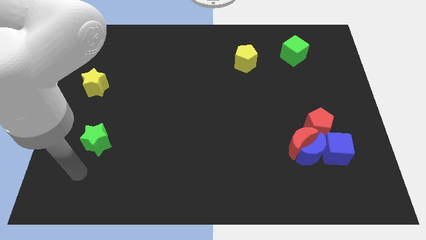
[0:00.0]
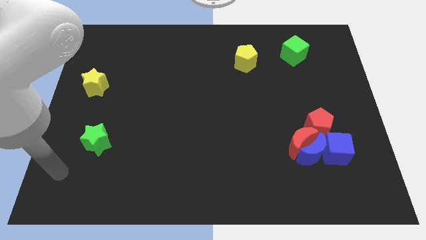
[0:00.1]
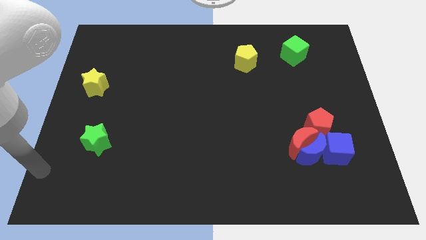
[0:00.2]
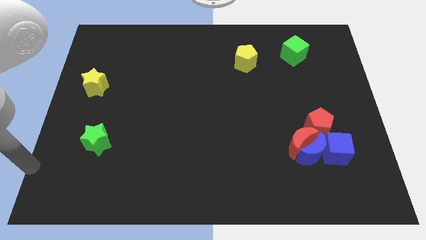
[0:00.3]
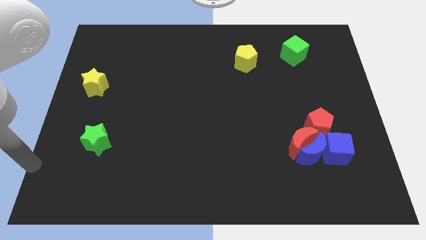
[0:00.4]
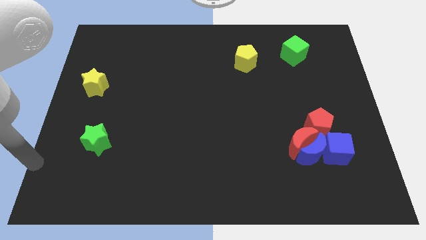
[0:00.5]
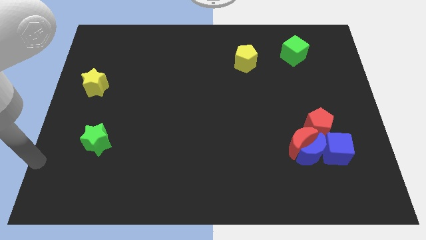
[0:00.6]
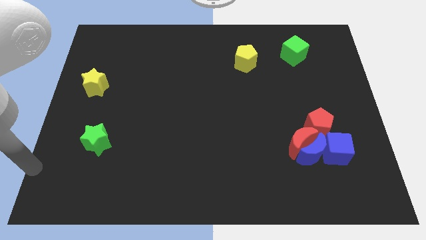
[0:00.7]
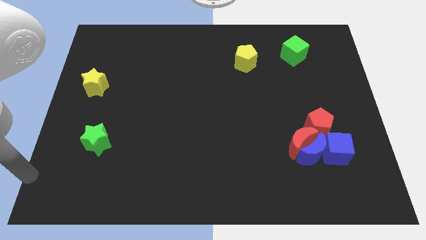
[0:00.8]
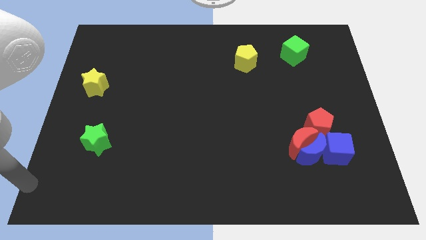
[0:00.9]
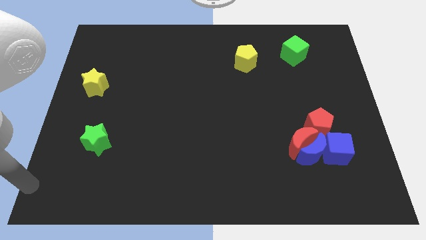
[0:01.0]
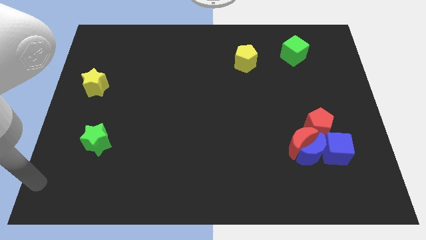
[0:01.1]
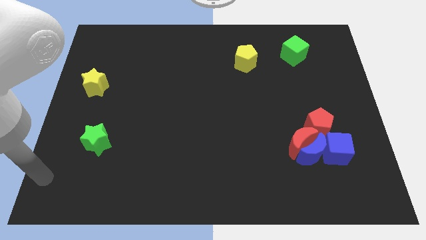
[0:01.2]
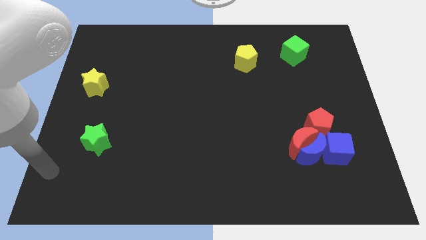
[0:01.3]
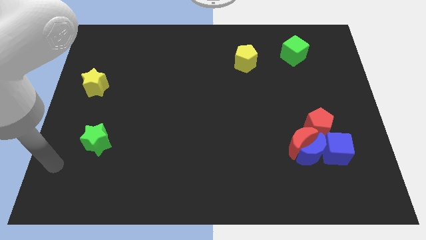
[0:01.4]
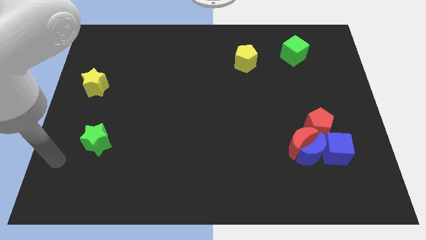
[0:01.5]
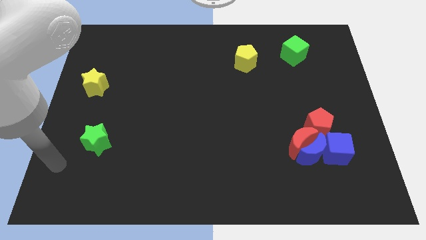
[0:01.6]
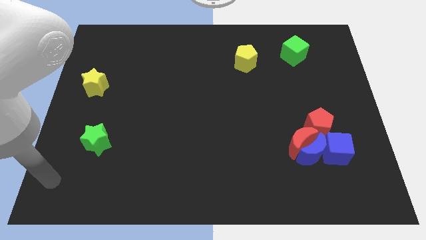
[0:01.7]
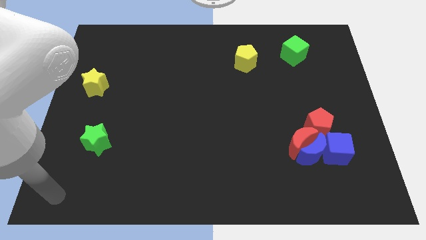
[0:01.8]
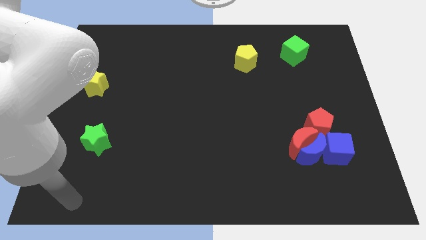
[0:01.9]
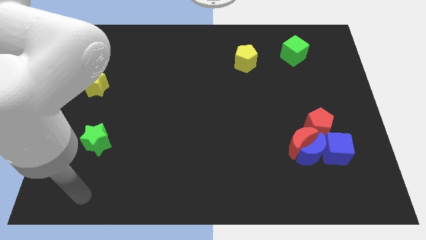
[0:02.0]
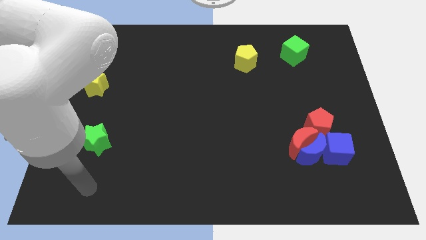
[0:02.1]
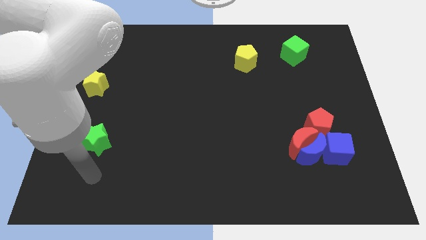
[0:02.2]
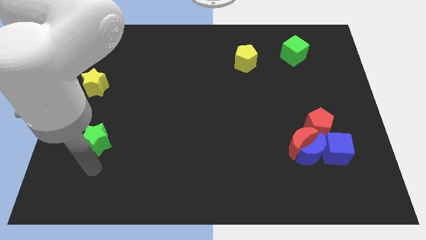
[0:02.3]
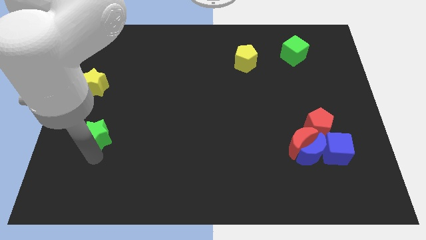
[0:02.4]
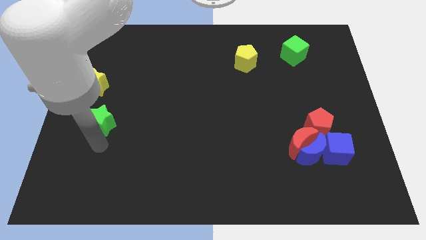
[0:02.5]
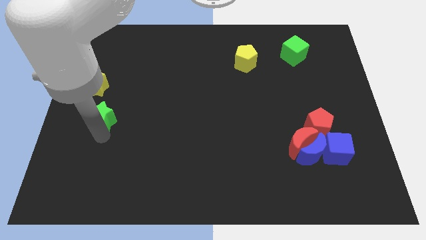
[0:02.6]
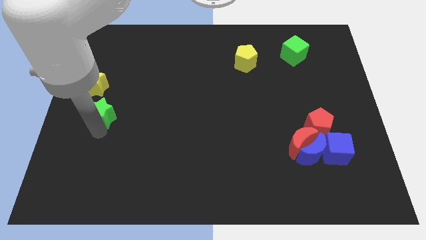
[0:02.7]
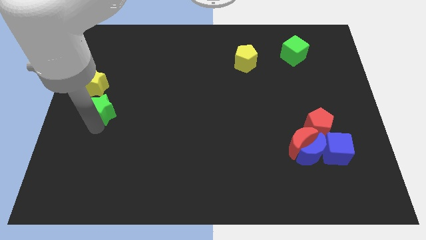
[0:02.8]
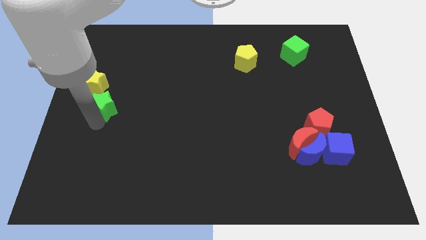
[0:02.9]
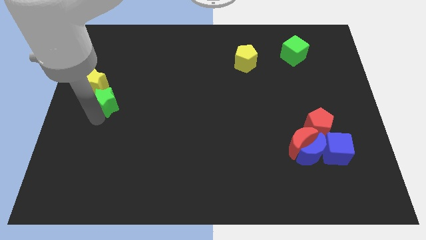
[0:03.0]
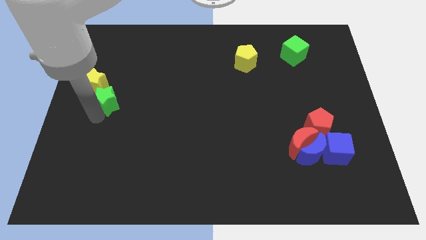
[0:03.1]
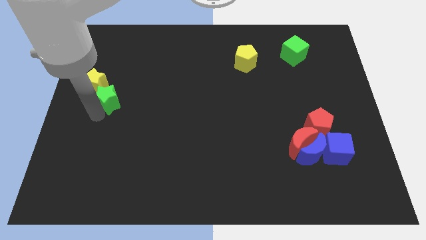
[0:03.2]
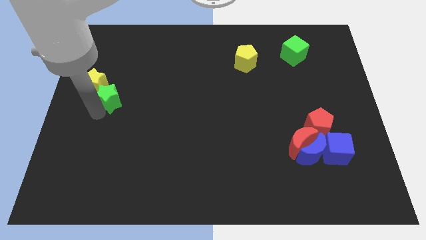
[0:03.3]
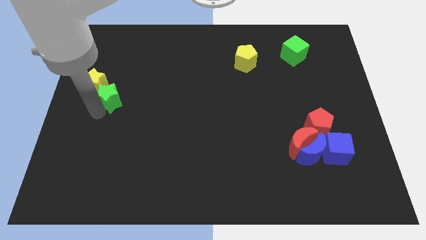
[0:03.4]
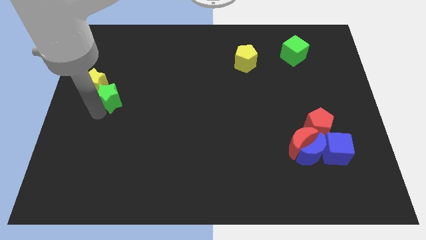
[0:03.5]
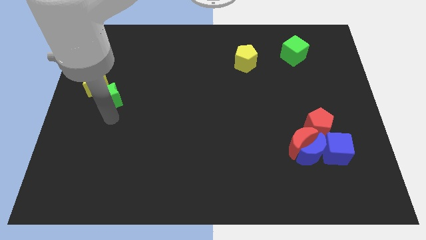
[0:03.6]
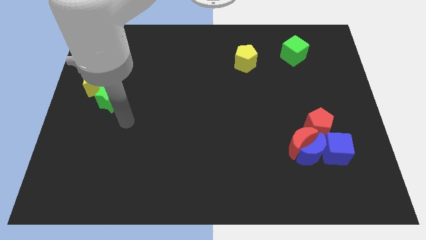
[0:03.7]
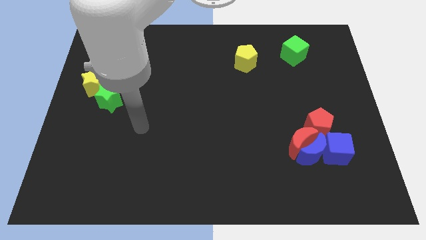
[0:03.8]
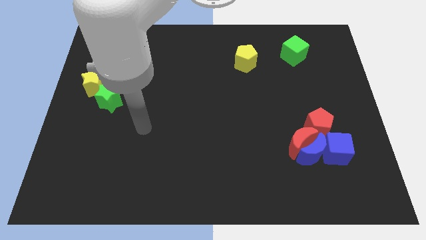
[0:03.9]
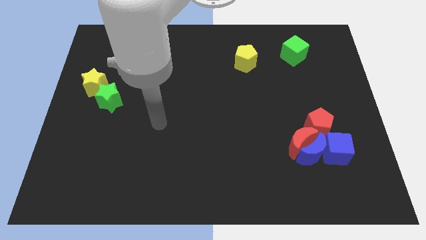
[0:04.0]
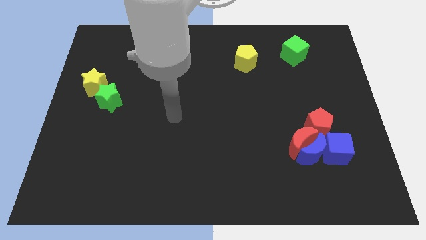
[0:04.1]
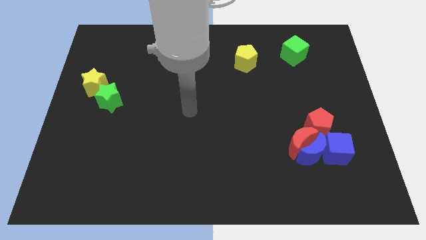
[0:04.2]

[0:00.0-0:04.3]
slide the green star diagonally on the bottom right side of the yellow star

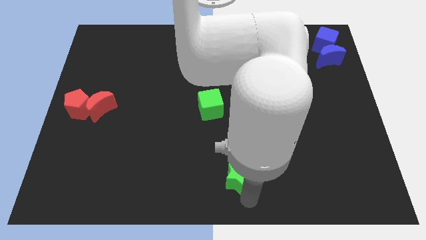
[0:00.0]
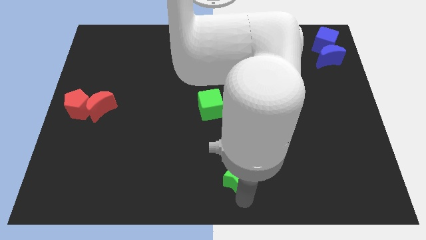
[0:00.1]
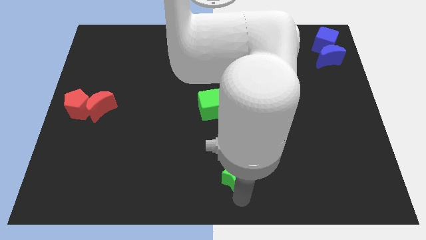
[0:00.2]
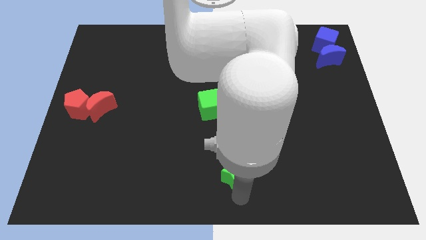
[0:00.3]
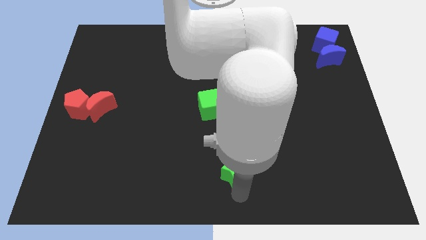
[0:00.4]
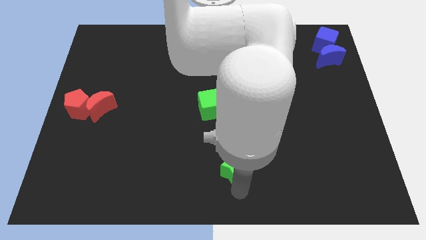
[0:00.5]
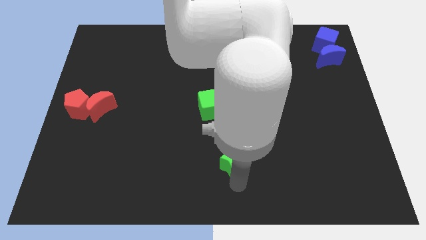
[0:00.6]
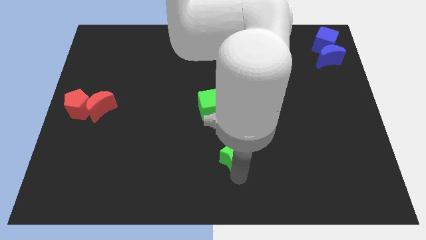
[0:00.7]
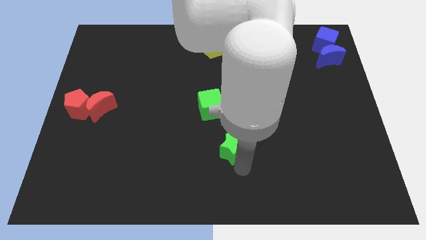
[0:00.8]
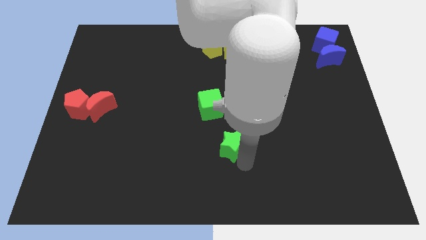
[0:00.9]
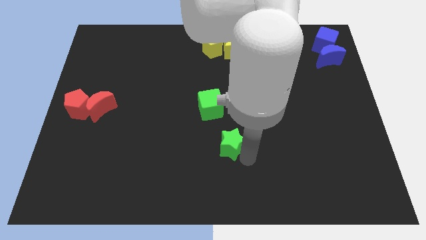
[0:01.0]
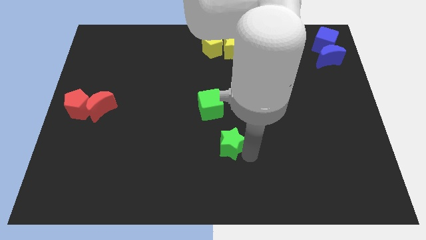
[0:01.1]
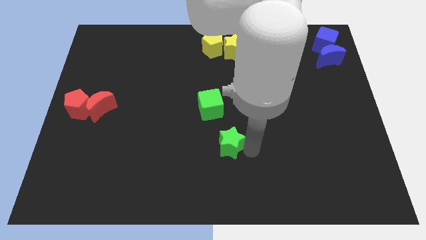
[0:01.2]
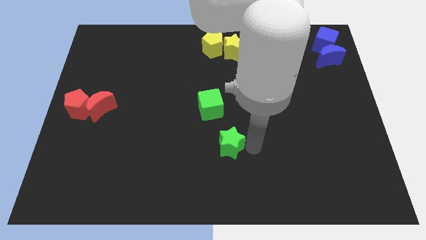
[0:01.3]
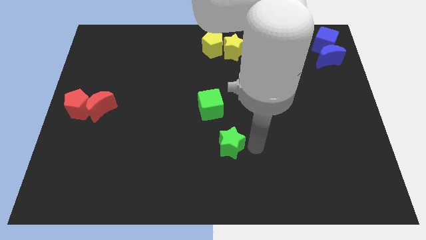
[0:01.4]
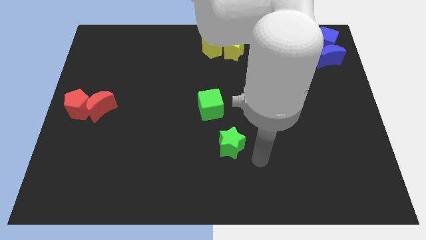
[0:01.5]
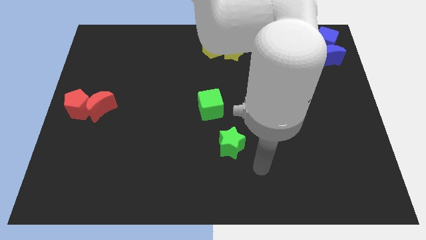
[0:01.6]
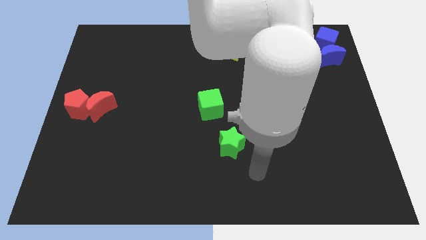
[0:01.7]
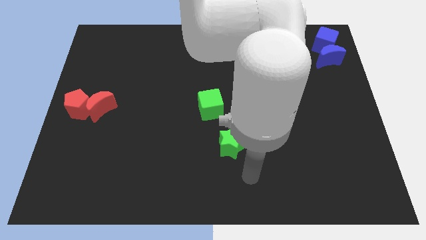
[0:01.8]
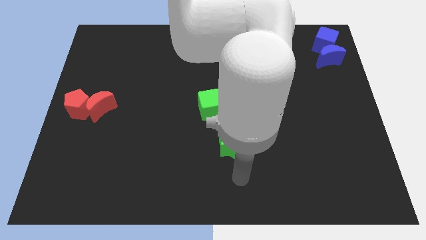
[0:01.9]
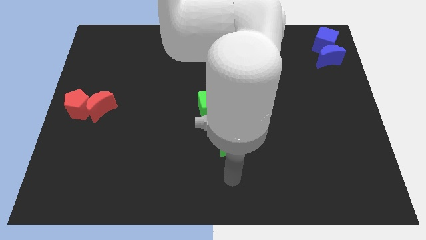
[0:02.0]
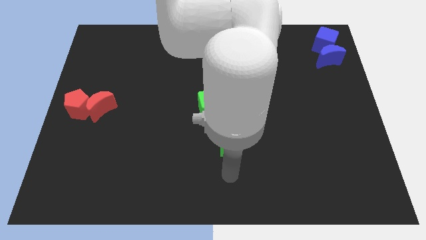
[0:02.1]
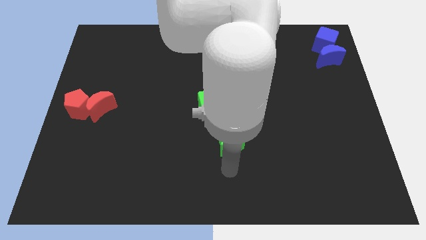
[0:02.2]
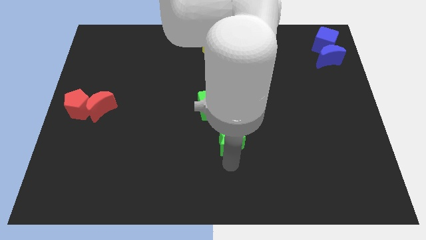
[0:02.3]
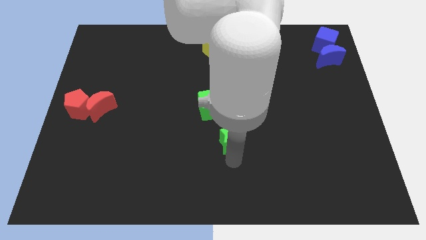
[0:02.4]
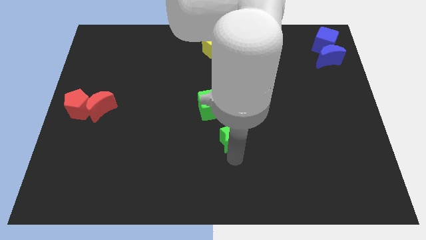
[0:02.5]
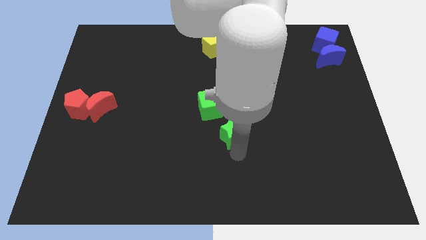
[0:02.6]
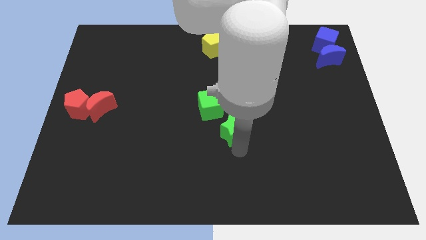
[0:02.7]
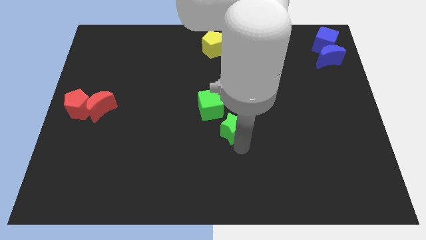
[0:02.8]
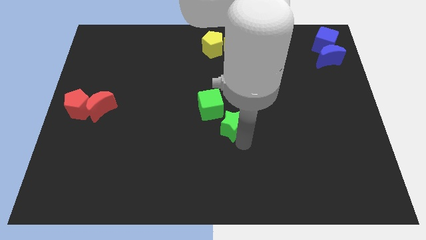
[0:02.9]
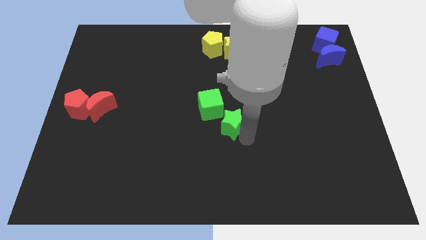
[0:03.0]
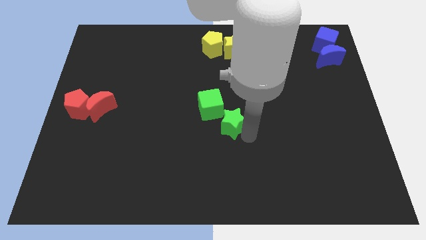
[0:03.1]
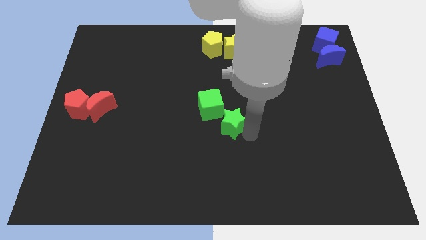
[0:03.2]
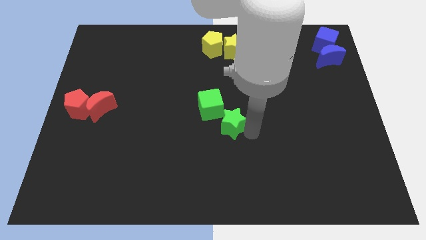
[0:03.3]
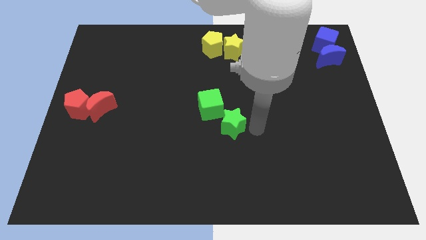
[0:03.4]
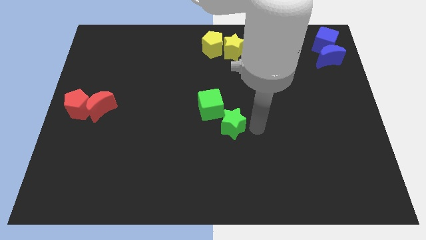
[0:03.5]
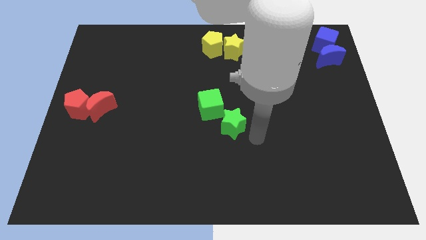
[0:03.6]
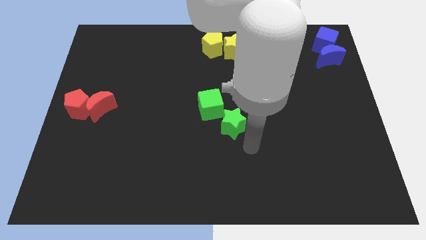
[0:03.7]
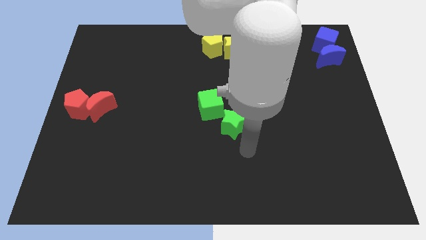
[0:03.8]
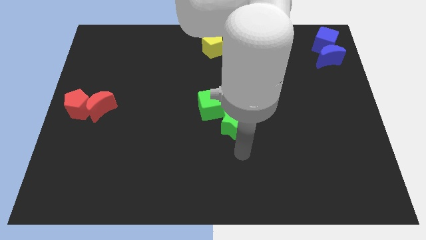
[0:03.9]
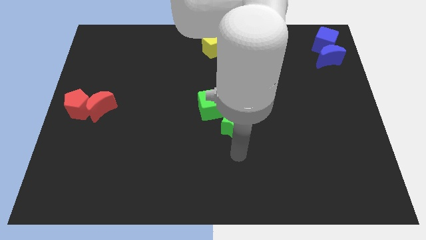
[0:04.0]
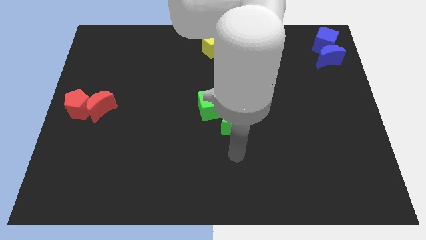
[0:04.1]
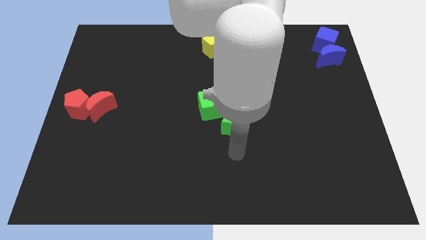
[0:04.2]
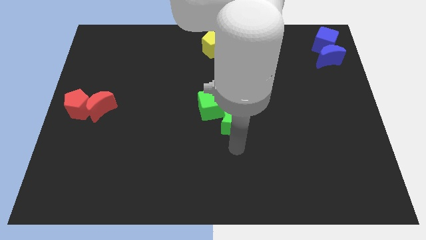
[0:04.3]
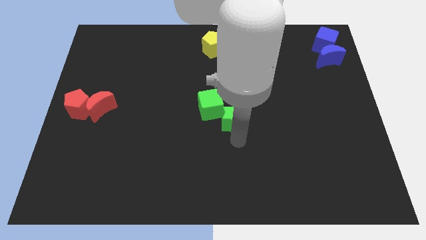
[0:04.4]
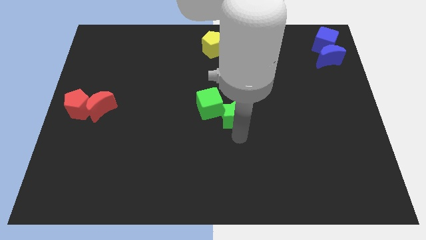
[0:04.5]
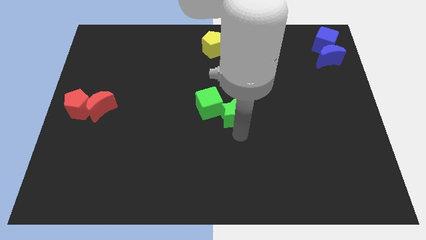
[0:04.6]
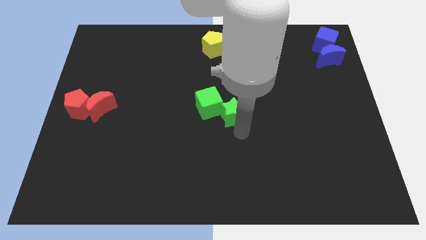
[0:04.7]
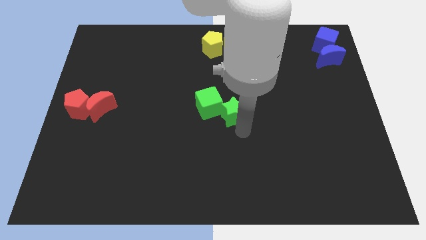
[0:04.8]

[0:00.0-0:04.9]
place green star on the right side of the green cube
